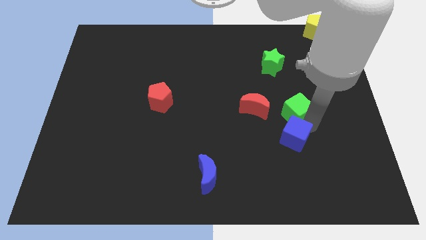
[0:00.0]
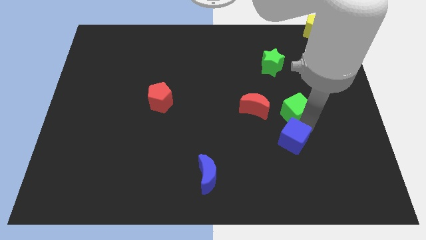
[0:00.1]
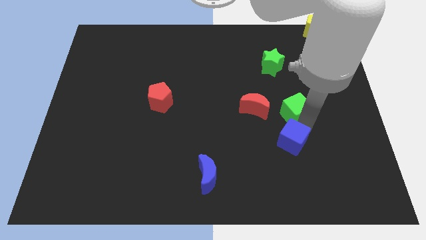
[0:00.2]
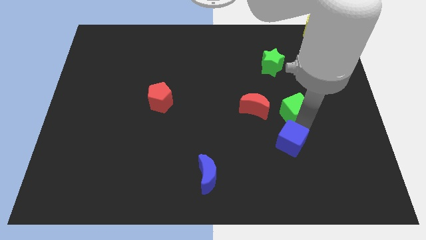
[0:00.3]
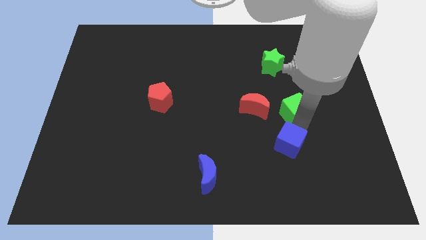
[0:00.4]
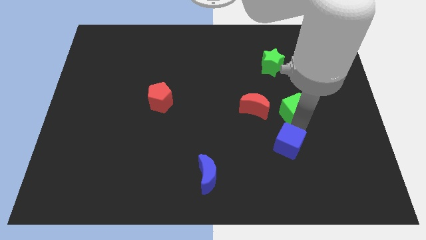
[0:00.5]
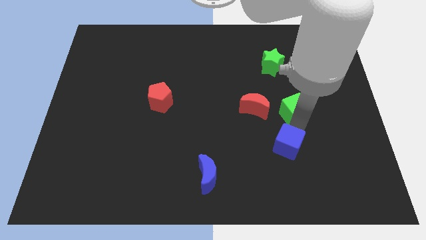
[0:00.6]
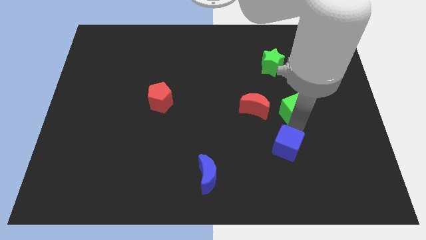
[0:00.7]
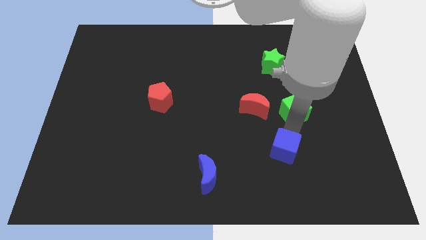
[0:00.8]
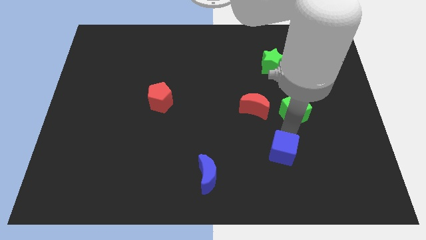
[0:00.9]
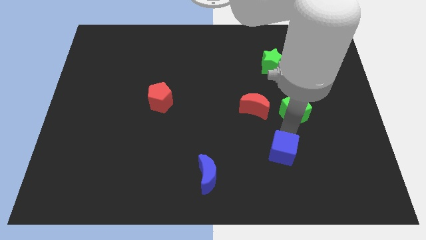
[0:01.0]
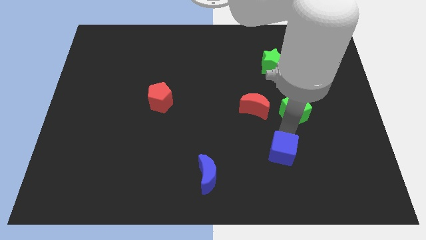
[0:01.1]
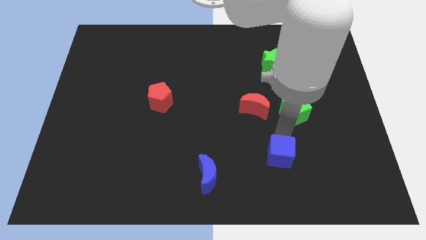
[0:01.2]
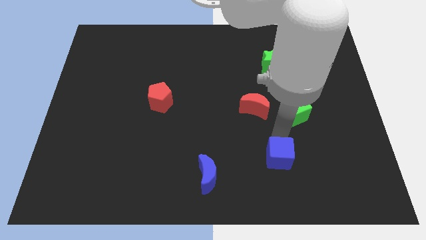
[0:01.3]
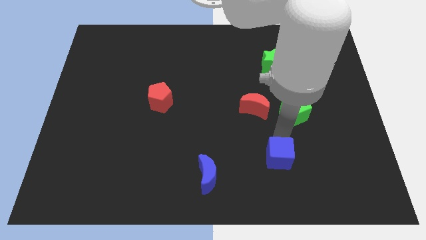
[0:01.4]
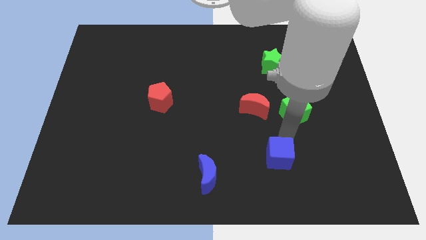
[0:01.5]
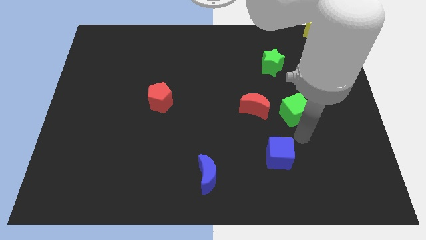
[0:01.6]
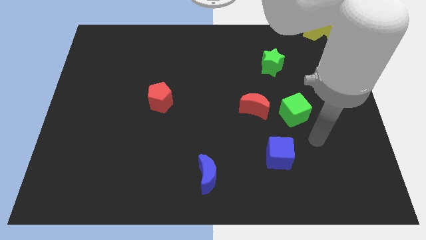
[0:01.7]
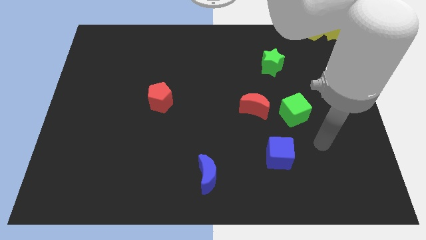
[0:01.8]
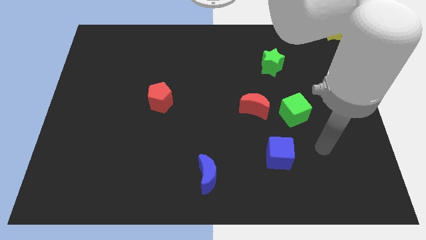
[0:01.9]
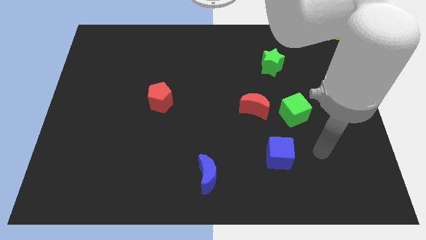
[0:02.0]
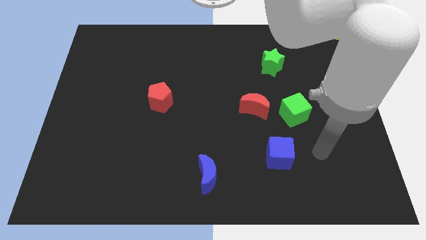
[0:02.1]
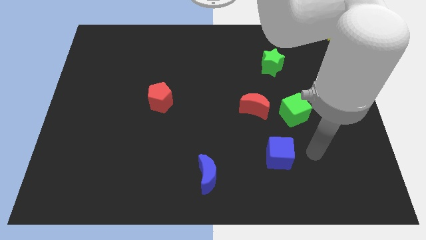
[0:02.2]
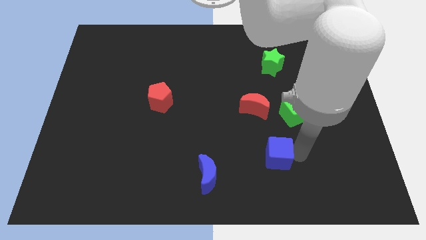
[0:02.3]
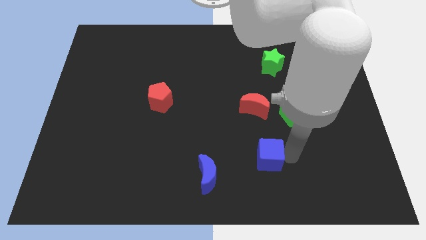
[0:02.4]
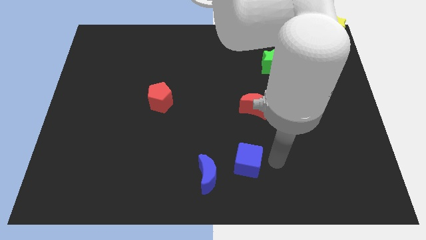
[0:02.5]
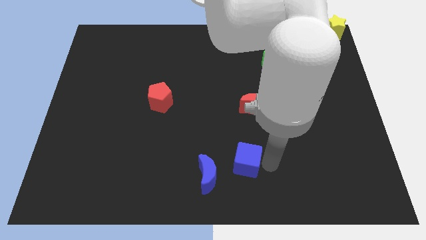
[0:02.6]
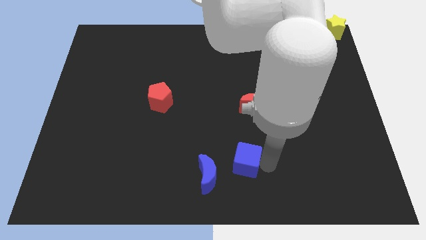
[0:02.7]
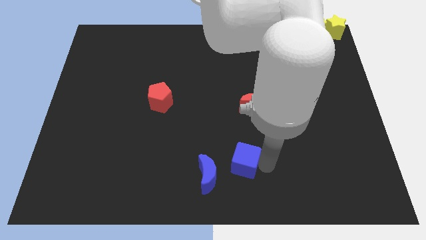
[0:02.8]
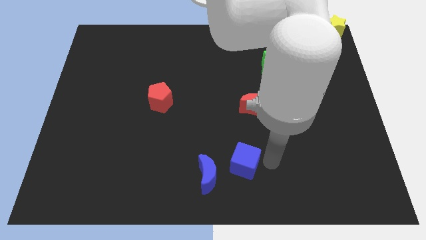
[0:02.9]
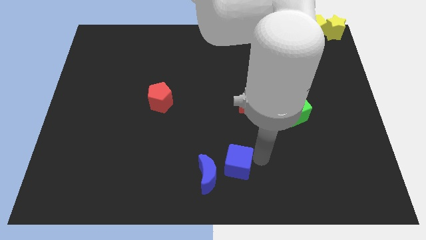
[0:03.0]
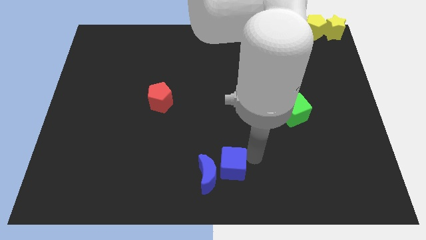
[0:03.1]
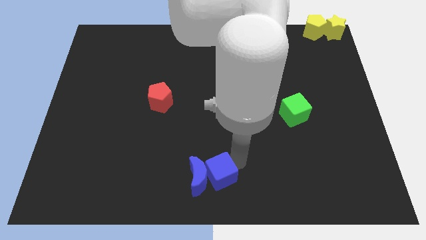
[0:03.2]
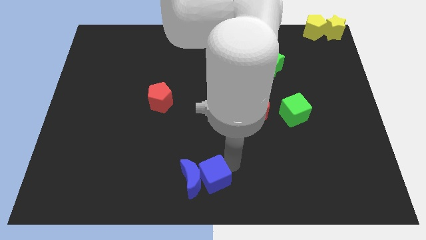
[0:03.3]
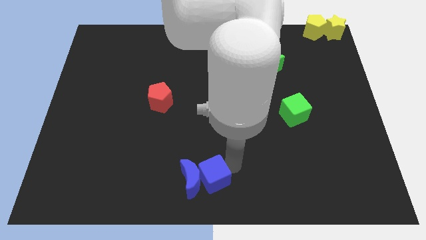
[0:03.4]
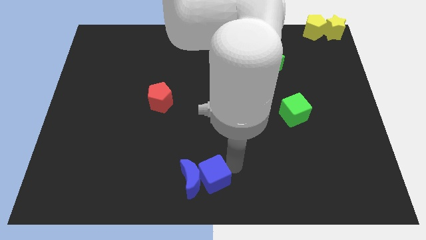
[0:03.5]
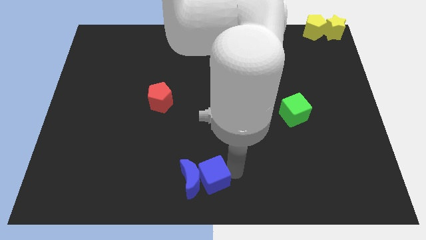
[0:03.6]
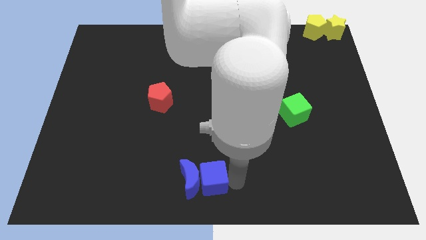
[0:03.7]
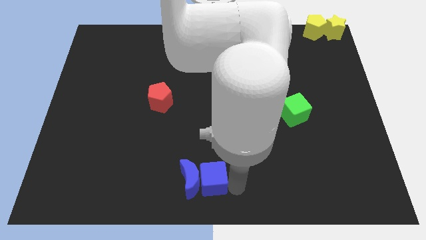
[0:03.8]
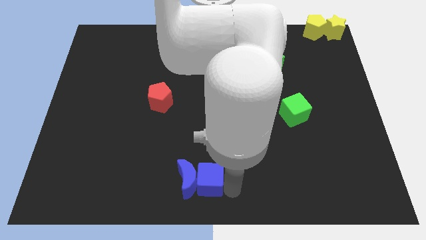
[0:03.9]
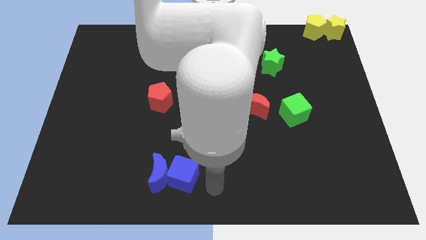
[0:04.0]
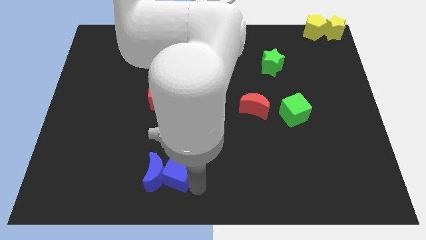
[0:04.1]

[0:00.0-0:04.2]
move blue cube into the blue moon

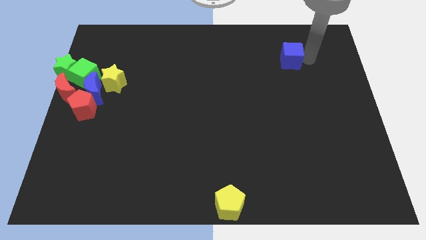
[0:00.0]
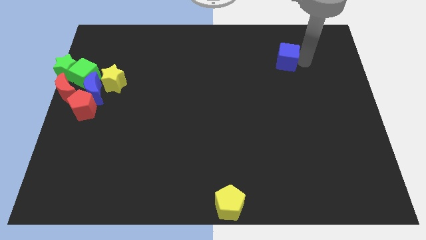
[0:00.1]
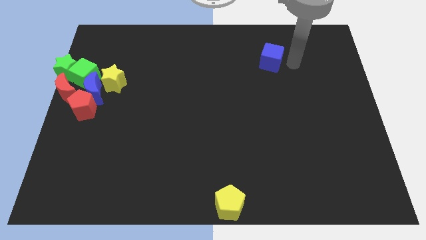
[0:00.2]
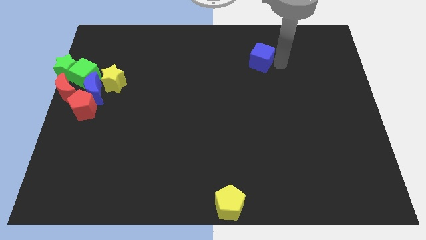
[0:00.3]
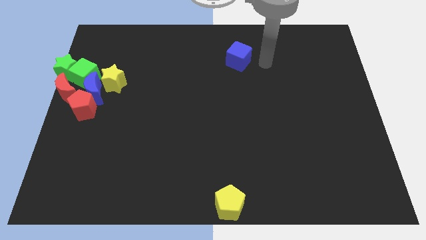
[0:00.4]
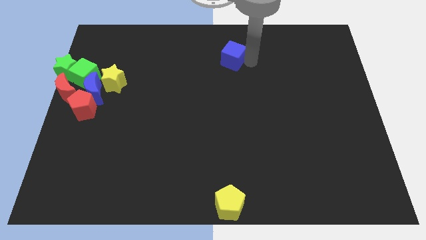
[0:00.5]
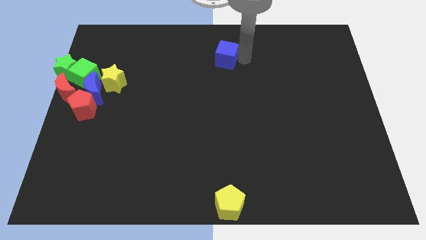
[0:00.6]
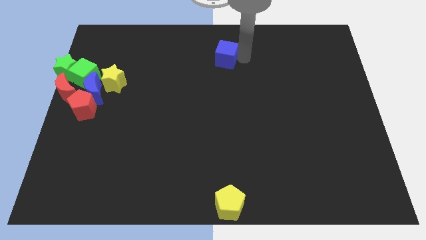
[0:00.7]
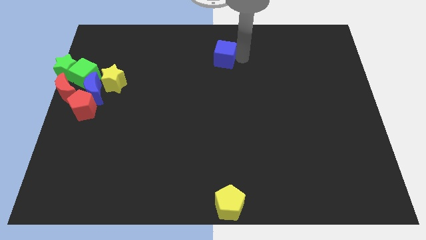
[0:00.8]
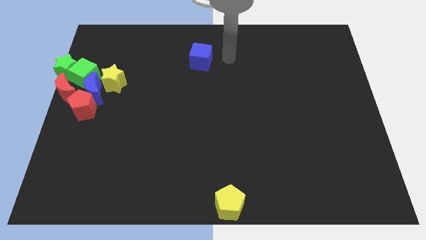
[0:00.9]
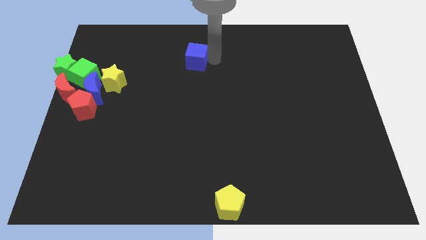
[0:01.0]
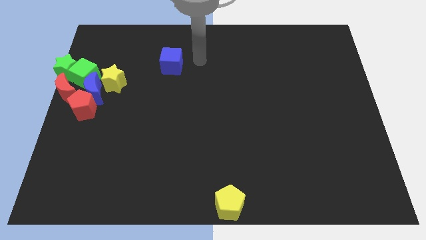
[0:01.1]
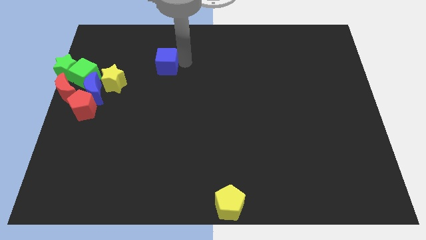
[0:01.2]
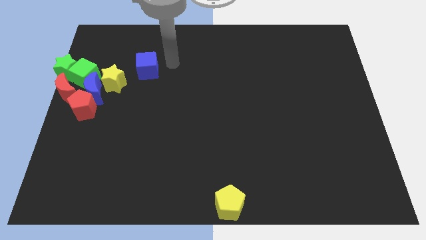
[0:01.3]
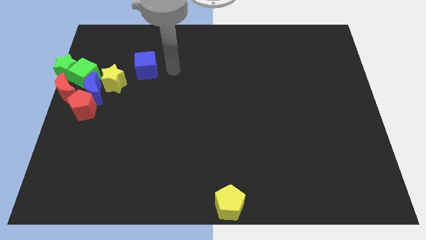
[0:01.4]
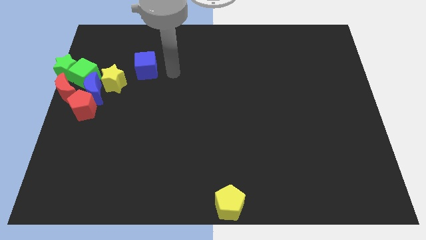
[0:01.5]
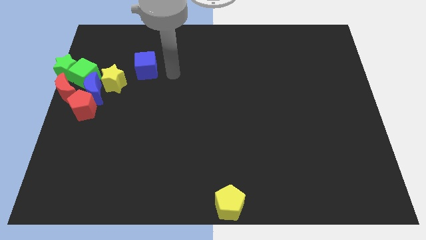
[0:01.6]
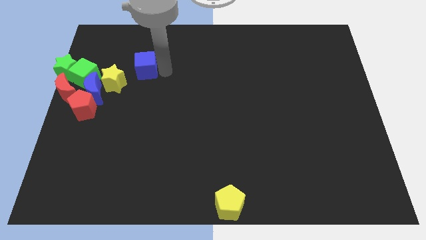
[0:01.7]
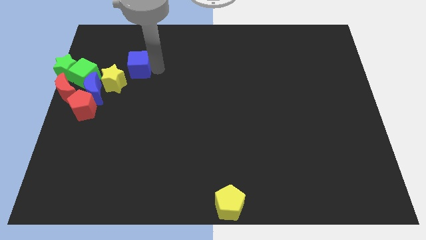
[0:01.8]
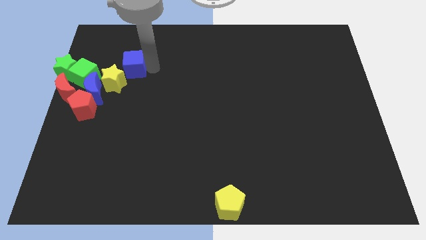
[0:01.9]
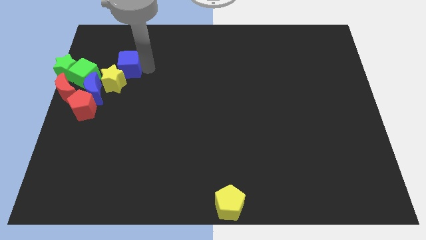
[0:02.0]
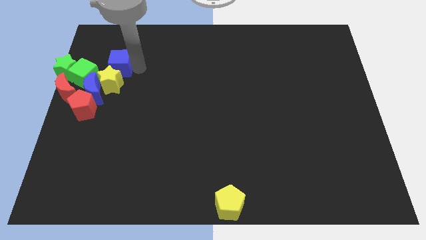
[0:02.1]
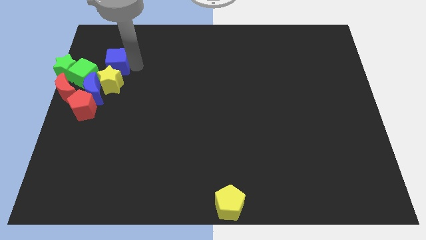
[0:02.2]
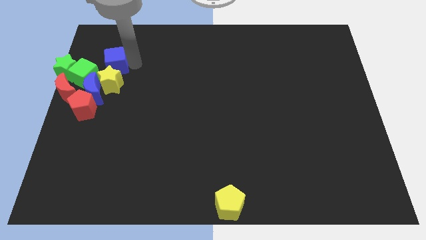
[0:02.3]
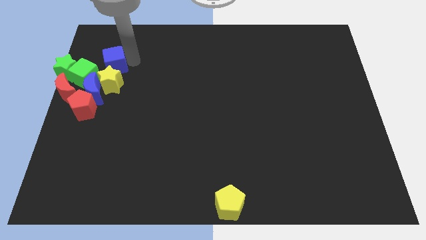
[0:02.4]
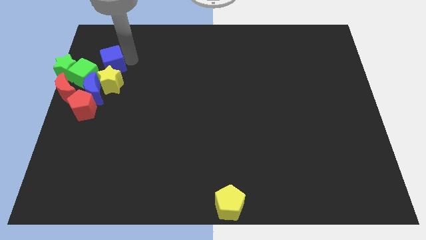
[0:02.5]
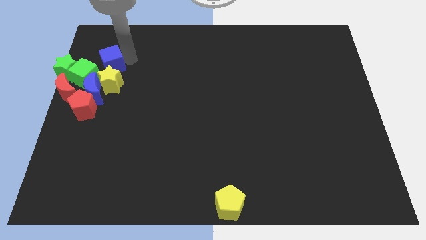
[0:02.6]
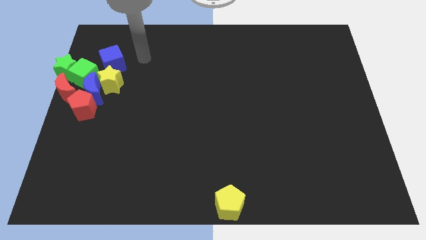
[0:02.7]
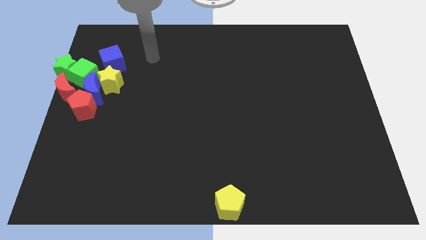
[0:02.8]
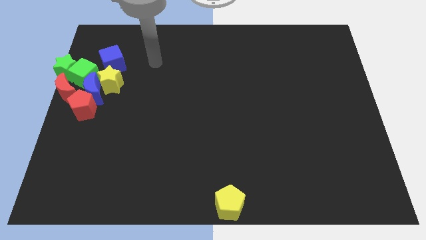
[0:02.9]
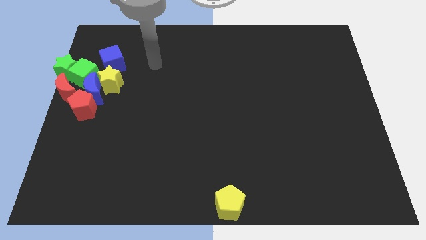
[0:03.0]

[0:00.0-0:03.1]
place the blue cube above the yellow star

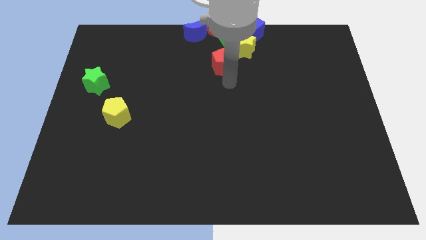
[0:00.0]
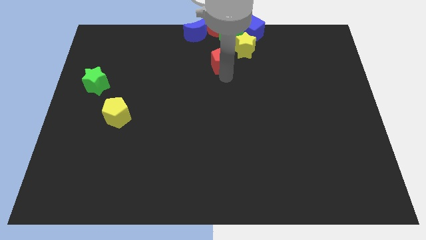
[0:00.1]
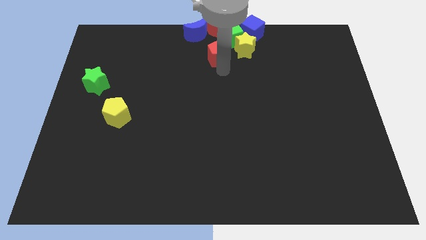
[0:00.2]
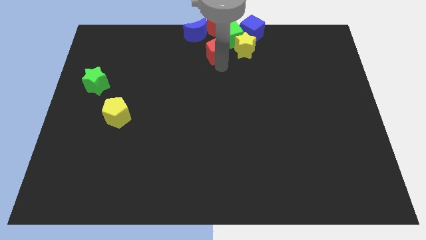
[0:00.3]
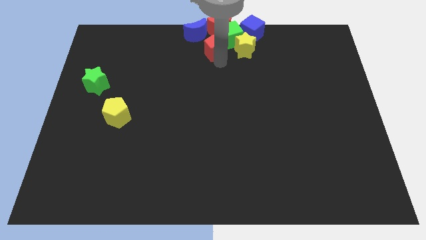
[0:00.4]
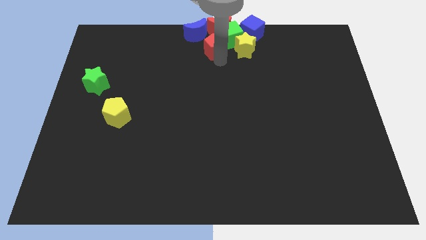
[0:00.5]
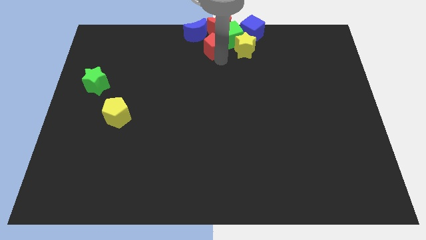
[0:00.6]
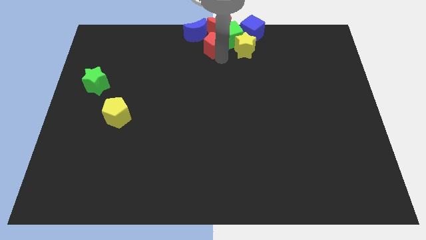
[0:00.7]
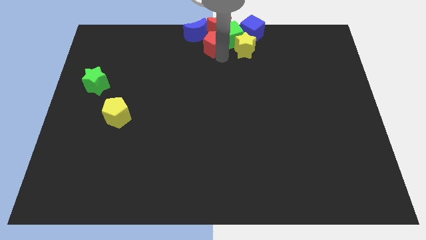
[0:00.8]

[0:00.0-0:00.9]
place the red pentagon to the left of the yellow star

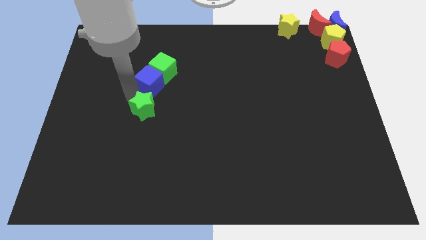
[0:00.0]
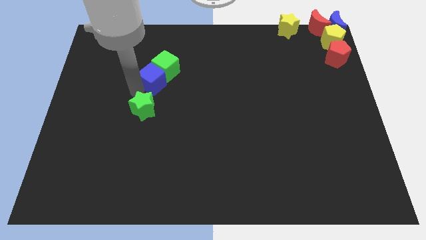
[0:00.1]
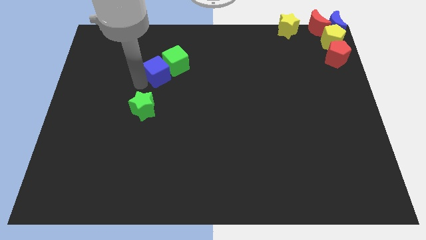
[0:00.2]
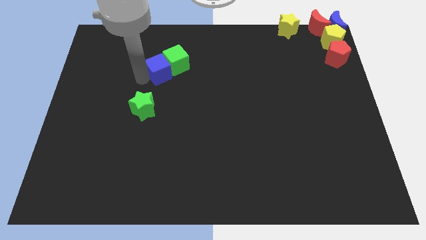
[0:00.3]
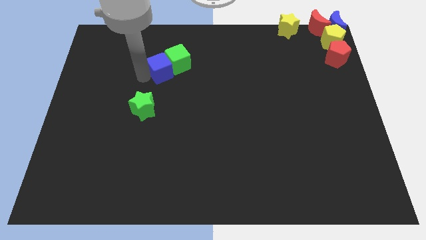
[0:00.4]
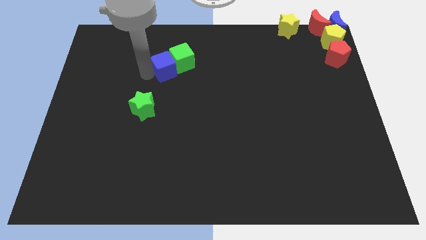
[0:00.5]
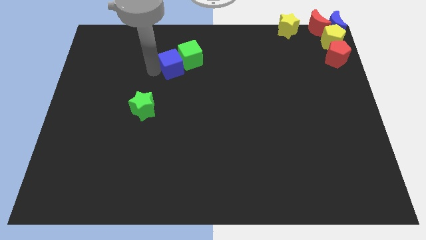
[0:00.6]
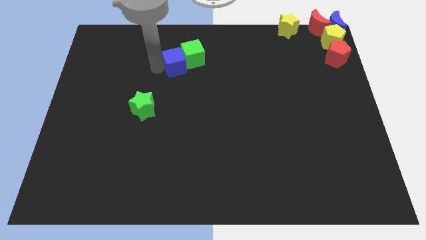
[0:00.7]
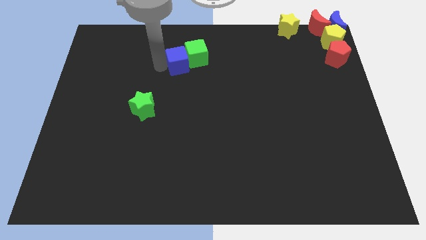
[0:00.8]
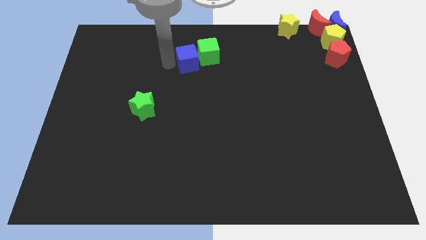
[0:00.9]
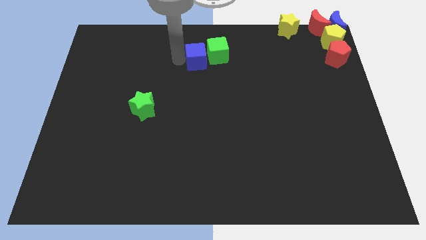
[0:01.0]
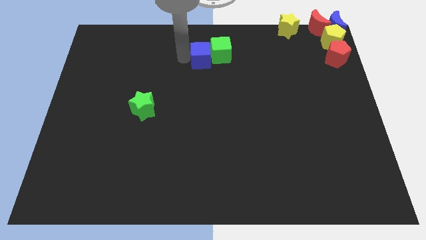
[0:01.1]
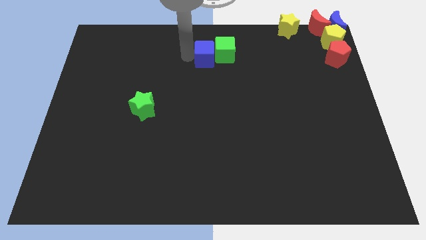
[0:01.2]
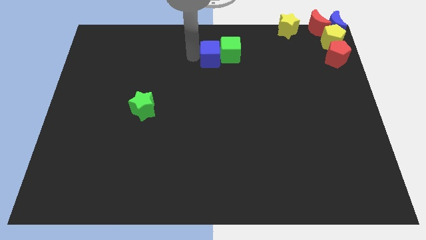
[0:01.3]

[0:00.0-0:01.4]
push the blue cube slightly towards the top right
